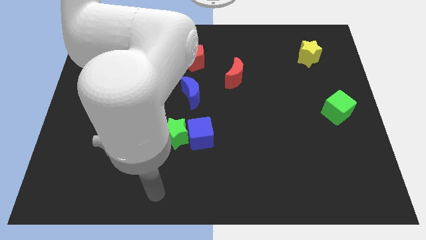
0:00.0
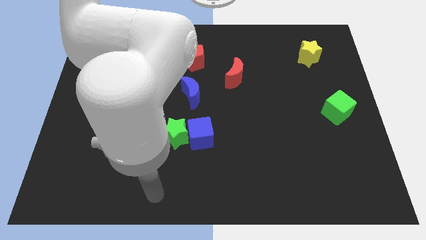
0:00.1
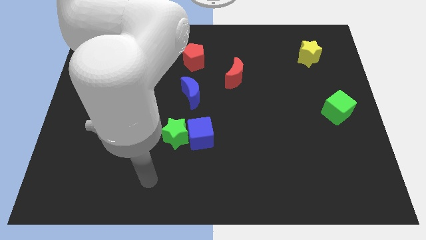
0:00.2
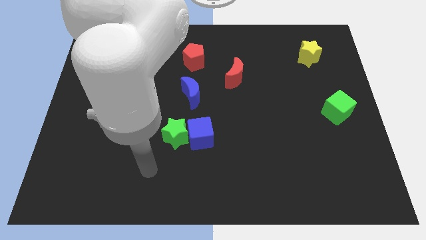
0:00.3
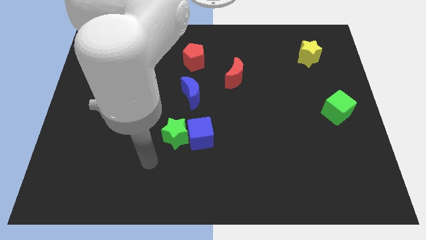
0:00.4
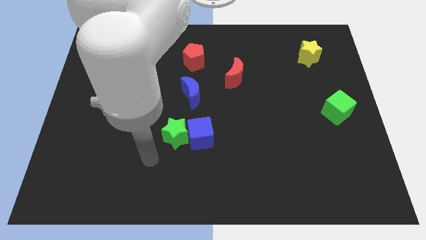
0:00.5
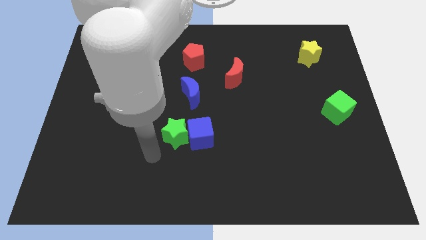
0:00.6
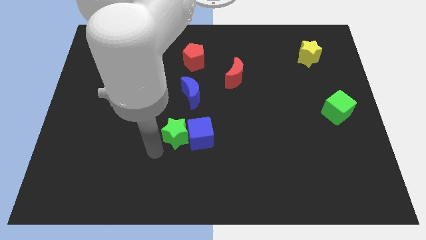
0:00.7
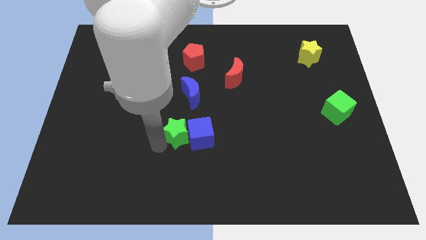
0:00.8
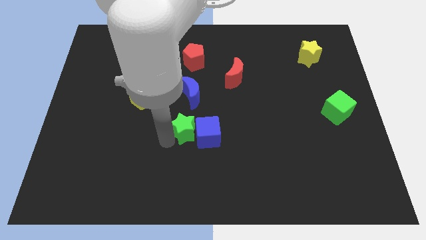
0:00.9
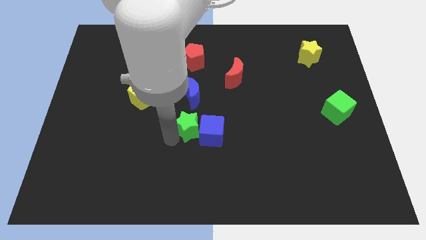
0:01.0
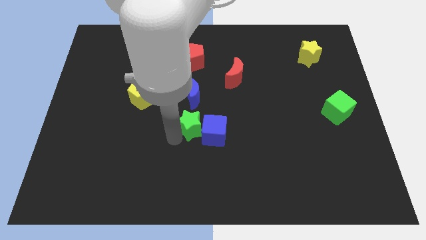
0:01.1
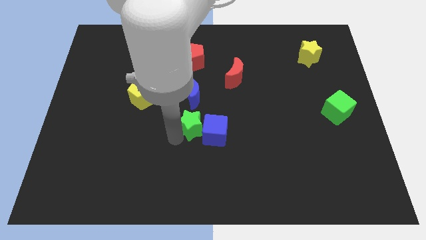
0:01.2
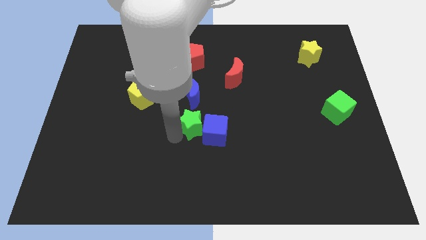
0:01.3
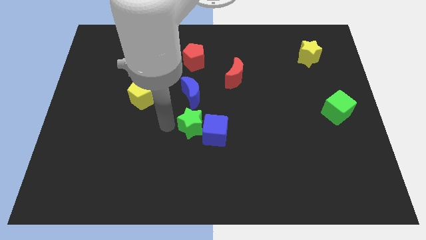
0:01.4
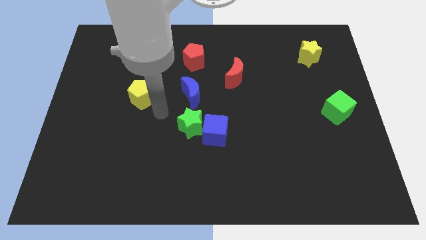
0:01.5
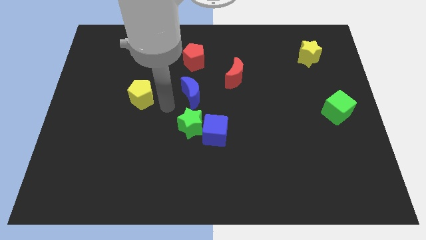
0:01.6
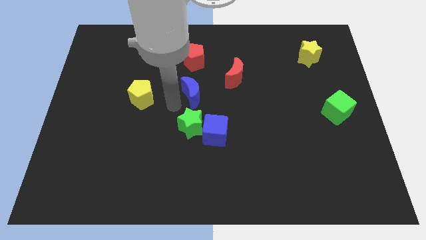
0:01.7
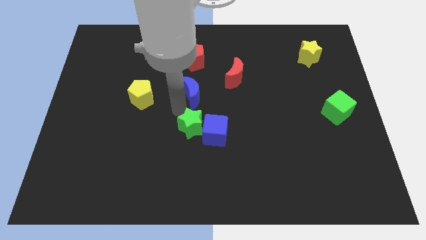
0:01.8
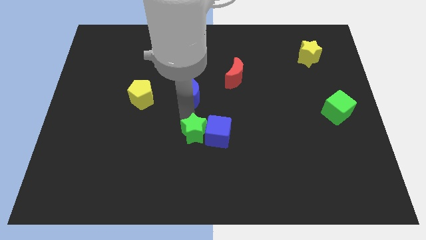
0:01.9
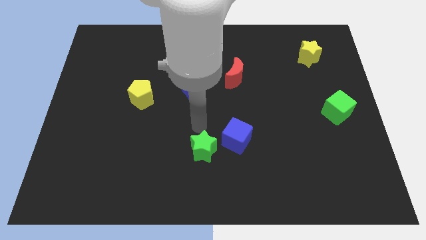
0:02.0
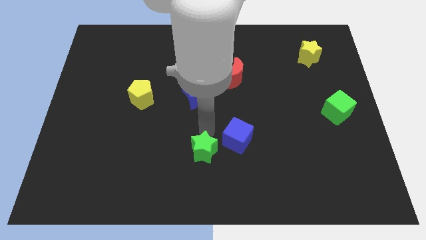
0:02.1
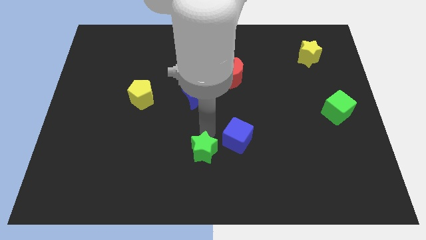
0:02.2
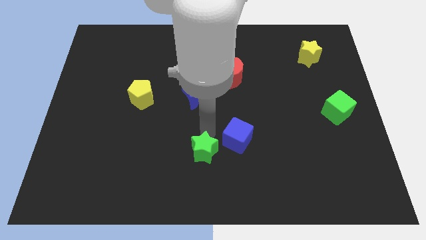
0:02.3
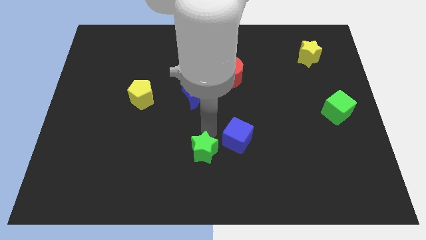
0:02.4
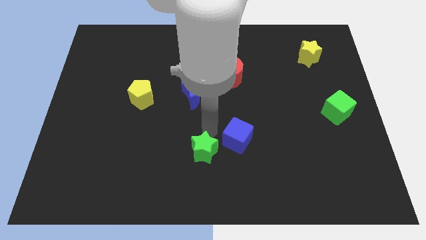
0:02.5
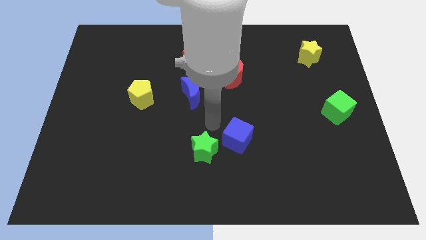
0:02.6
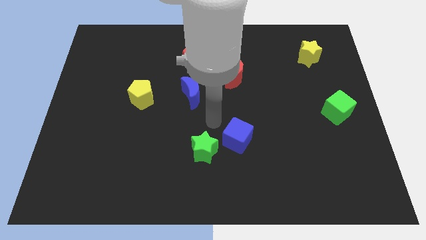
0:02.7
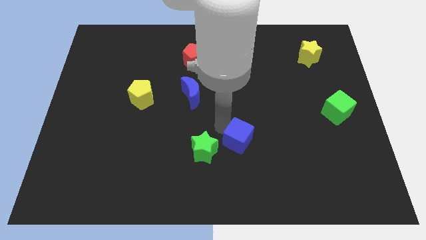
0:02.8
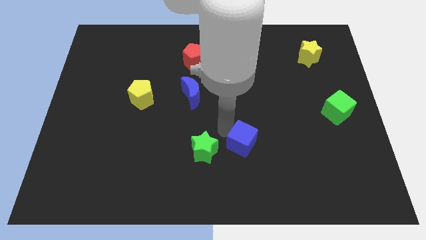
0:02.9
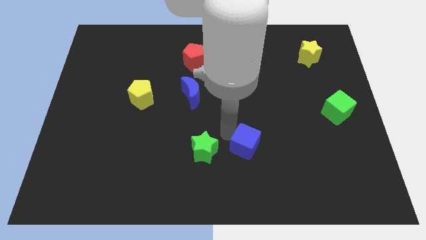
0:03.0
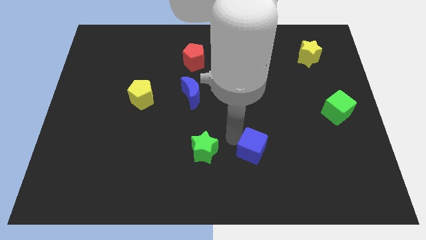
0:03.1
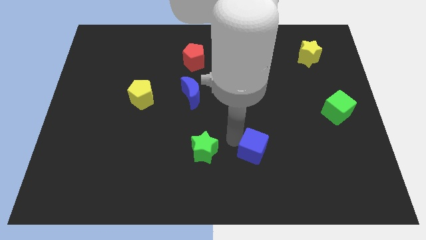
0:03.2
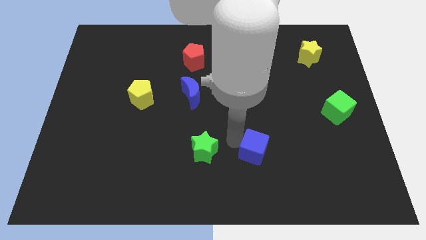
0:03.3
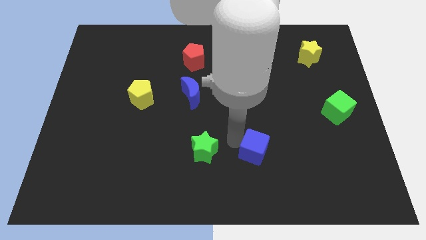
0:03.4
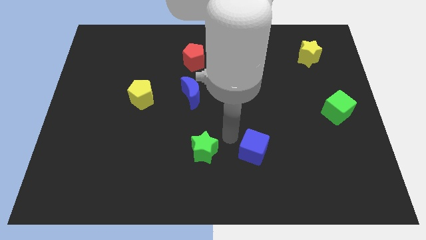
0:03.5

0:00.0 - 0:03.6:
move the blue cube to the right side of the green star

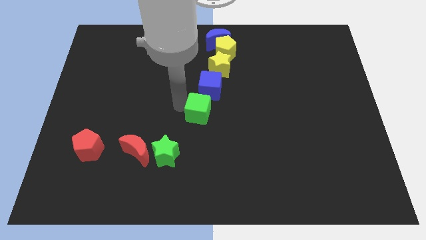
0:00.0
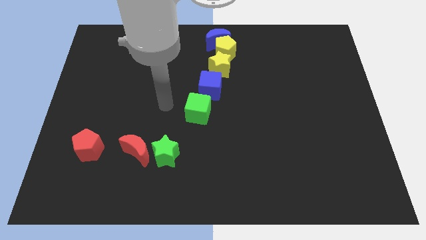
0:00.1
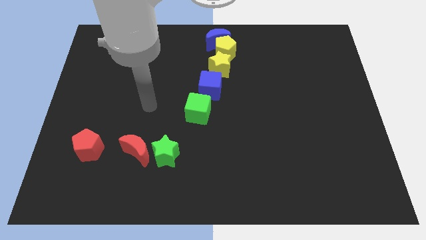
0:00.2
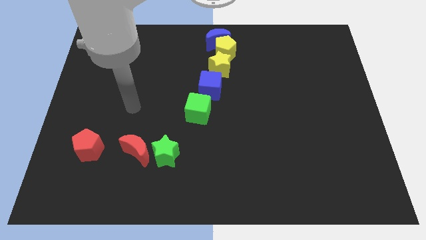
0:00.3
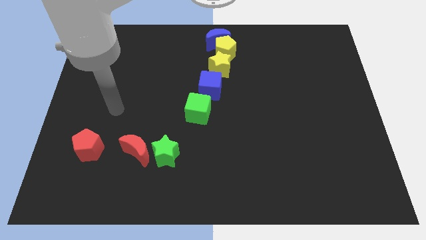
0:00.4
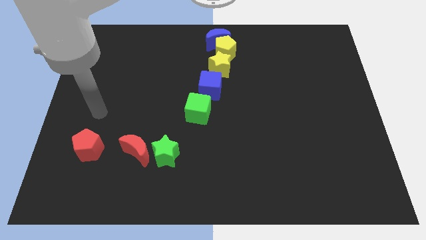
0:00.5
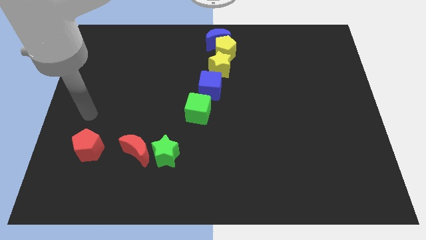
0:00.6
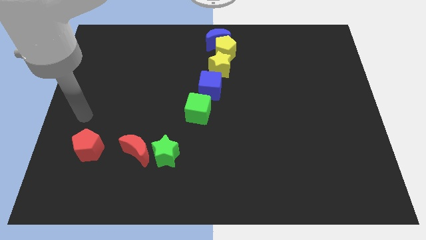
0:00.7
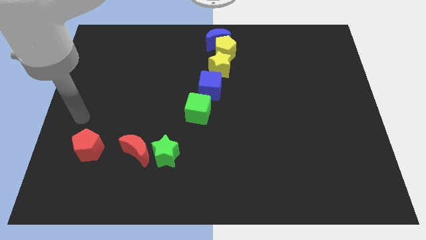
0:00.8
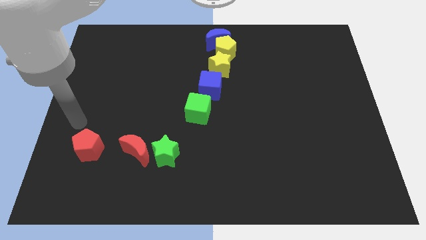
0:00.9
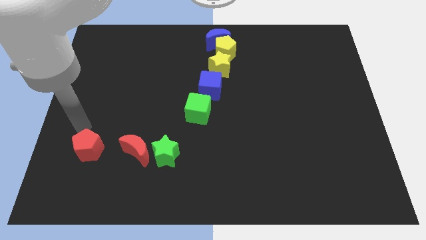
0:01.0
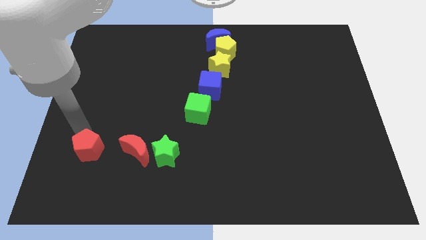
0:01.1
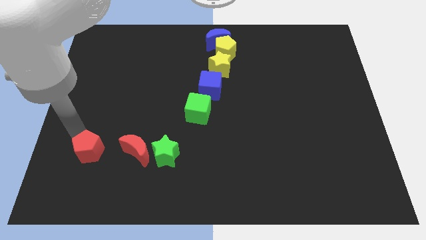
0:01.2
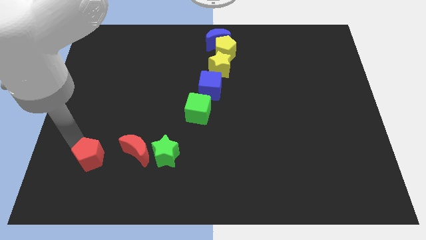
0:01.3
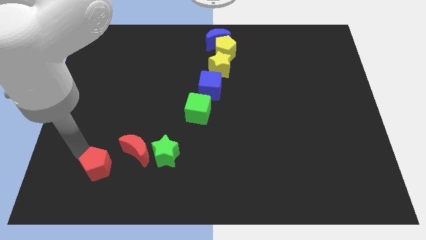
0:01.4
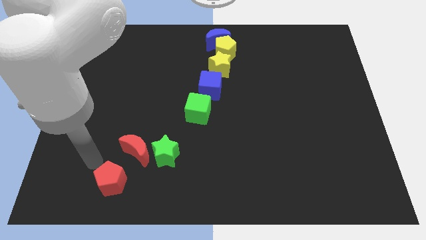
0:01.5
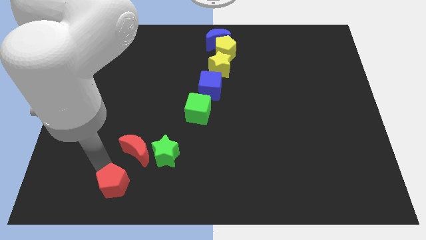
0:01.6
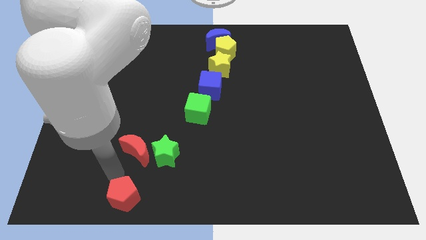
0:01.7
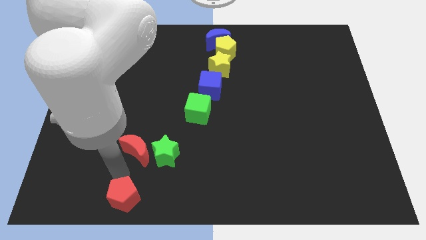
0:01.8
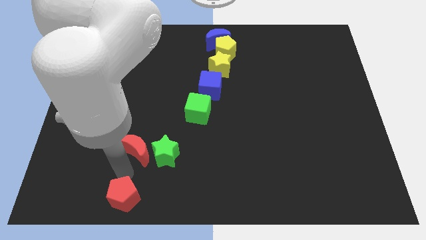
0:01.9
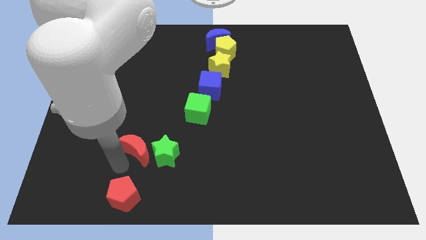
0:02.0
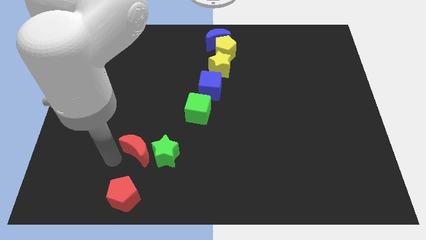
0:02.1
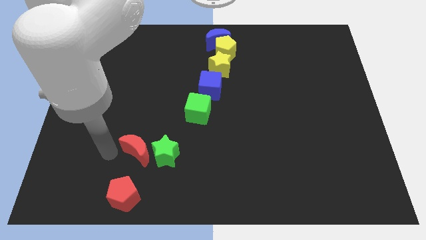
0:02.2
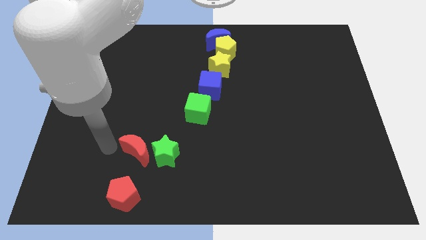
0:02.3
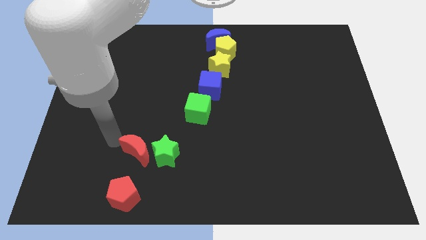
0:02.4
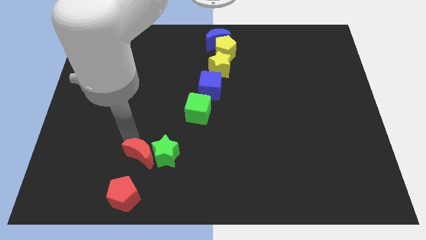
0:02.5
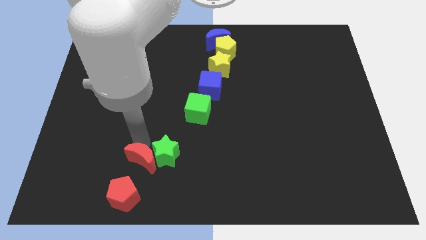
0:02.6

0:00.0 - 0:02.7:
move red pentagon to the bottom center touch red moon

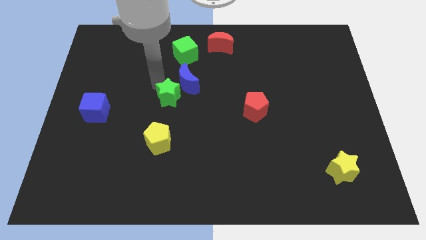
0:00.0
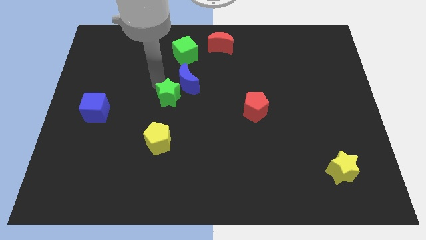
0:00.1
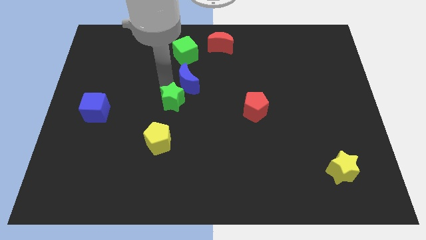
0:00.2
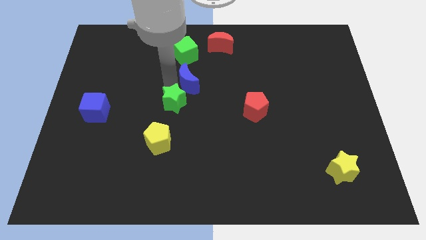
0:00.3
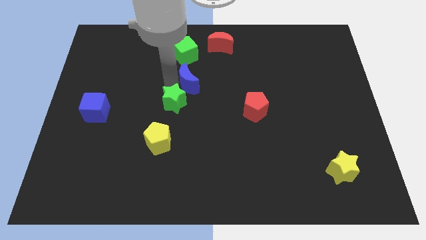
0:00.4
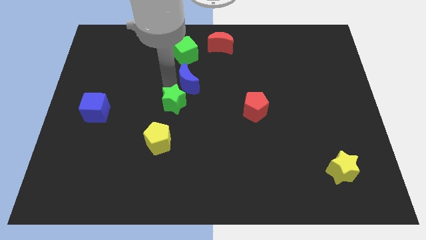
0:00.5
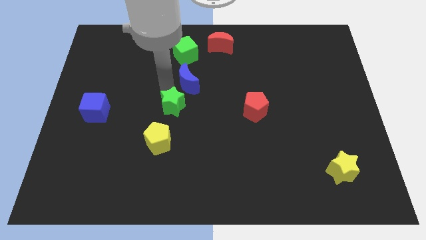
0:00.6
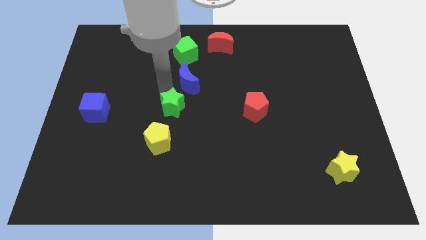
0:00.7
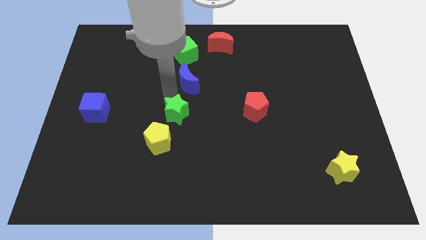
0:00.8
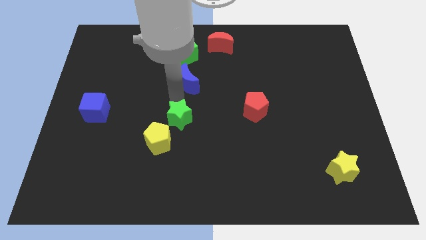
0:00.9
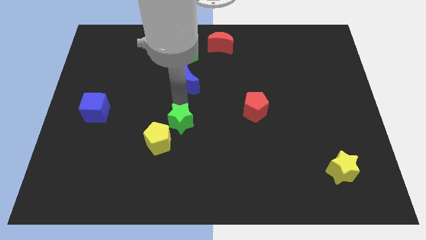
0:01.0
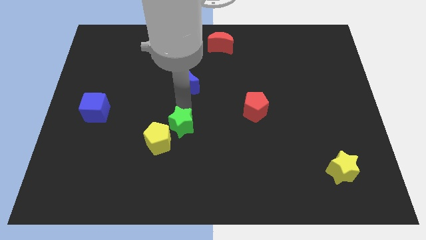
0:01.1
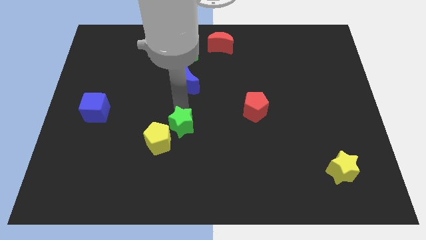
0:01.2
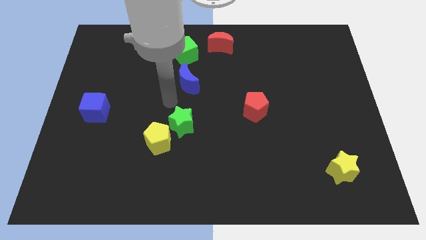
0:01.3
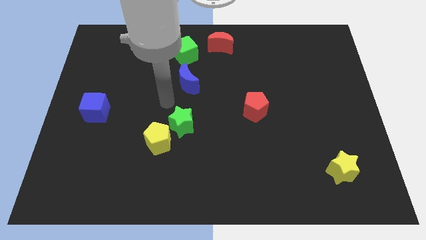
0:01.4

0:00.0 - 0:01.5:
push the green star diagonally to the top right of yellow pentagon

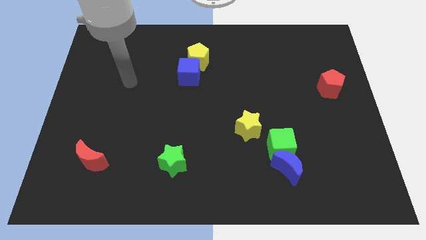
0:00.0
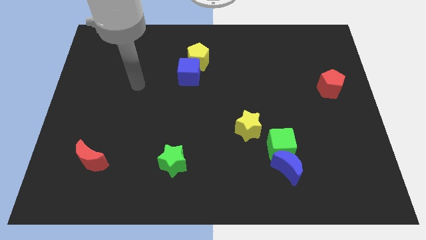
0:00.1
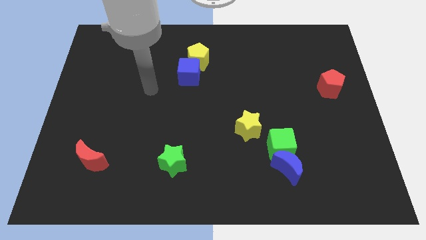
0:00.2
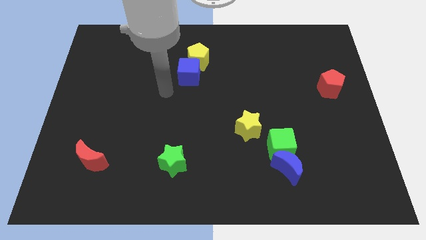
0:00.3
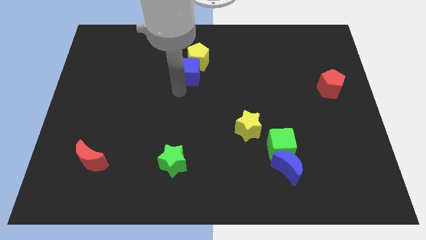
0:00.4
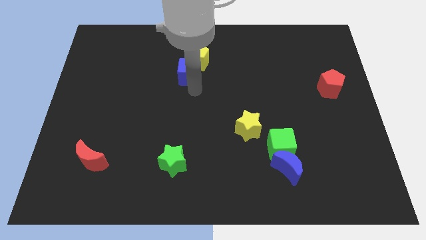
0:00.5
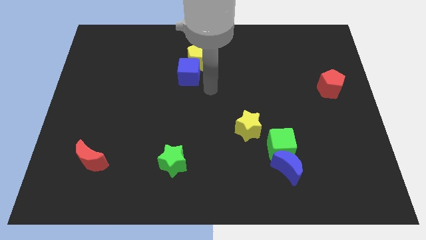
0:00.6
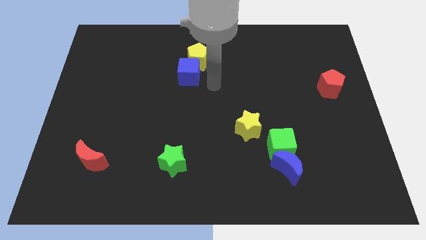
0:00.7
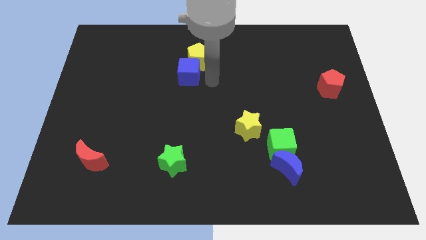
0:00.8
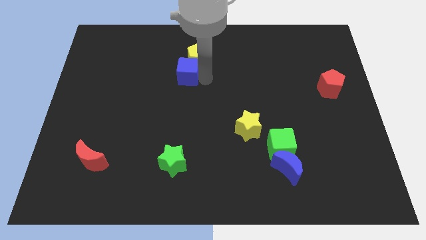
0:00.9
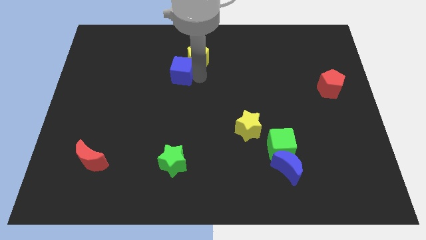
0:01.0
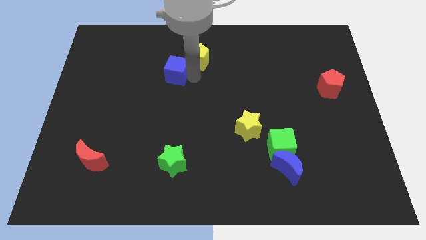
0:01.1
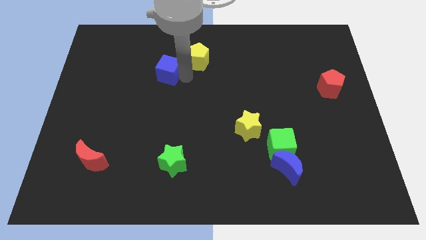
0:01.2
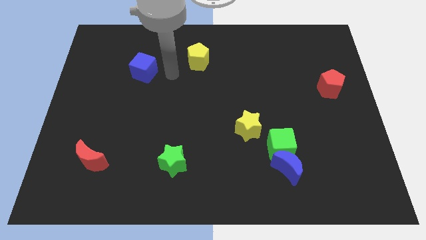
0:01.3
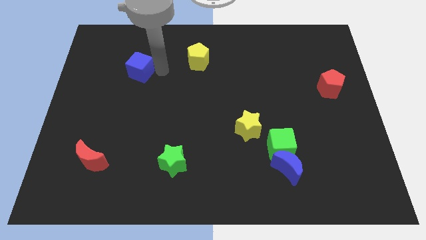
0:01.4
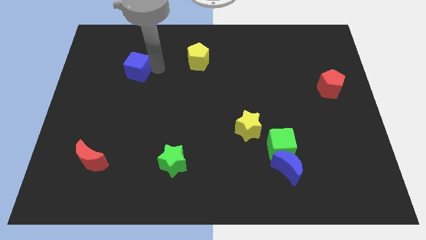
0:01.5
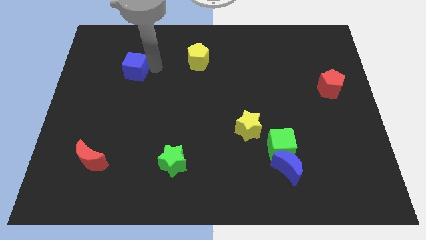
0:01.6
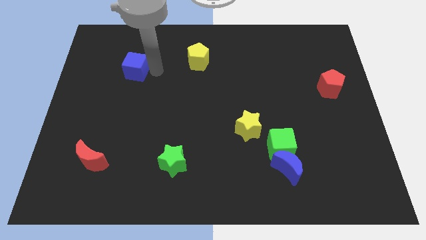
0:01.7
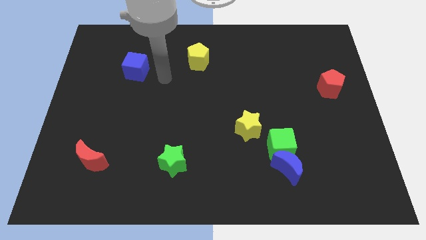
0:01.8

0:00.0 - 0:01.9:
move the blue cube to the left
